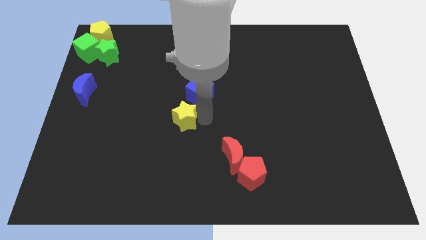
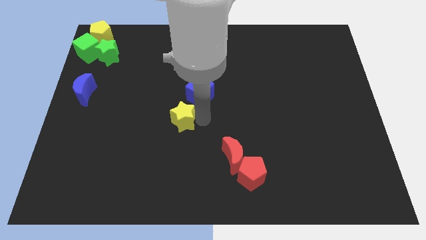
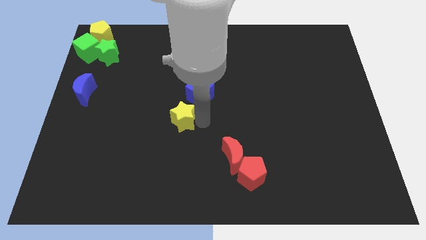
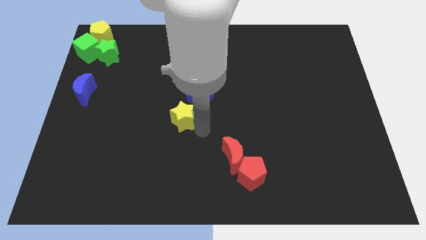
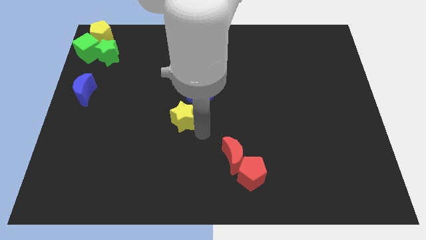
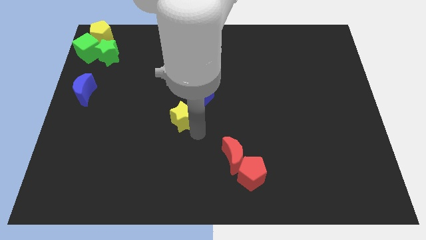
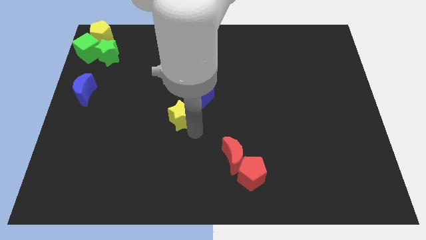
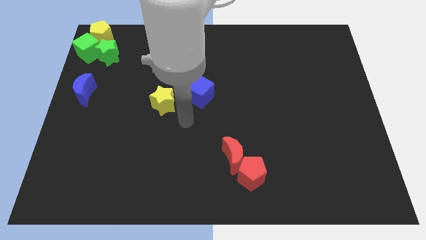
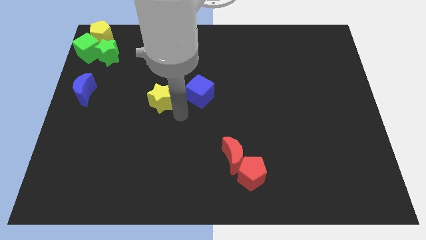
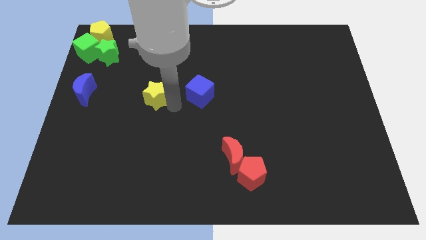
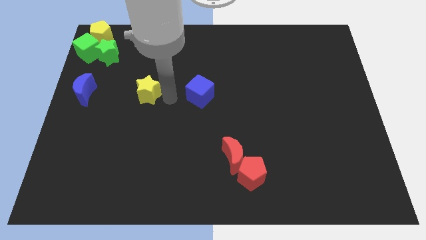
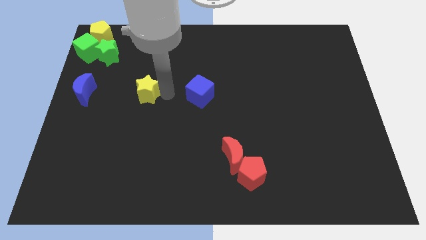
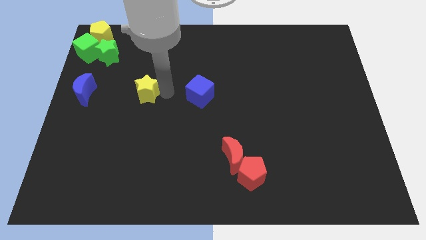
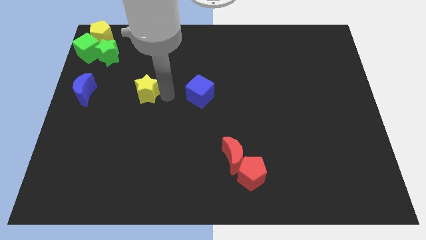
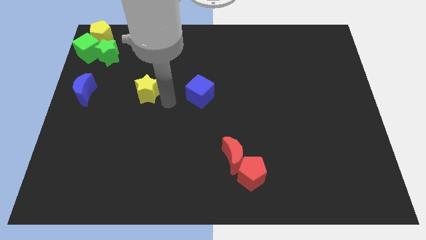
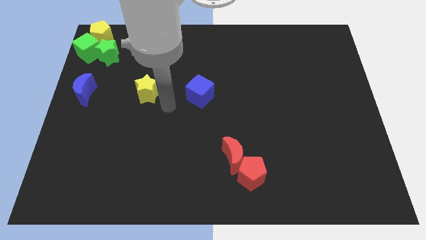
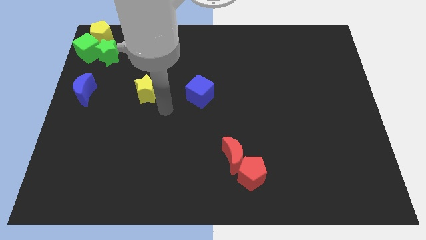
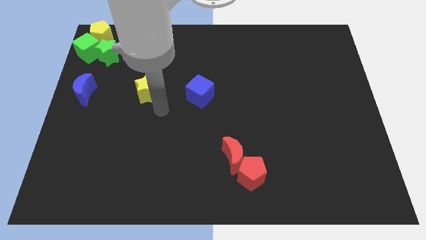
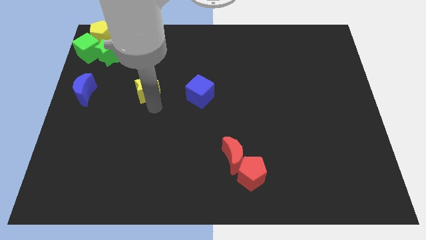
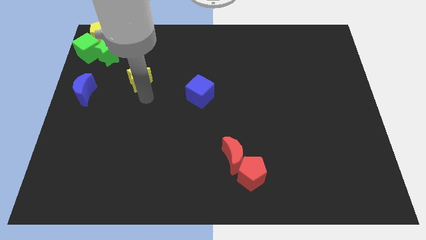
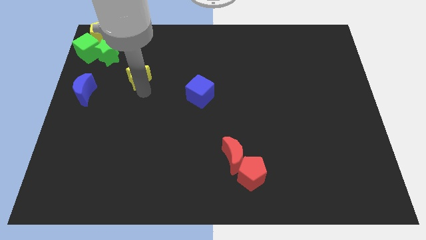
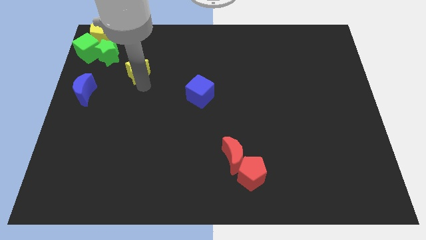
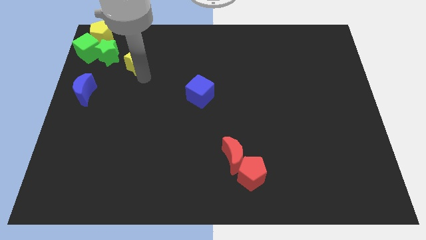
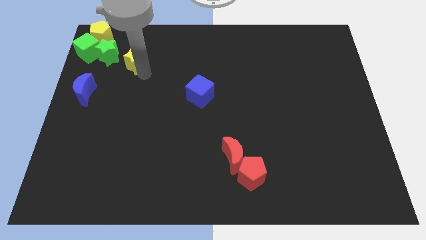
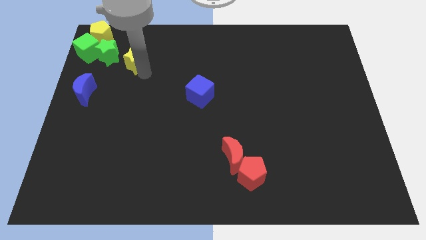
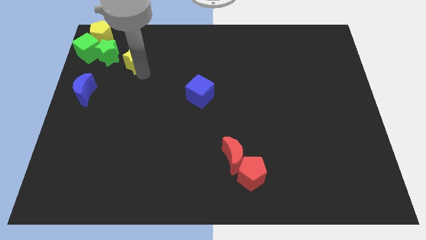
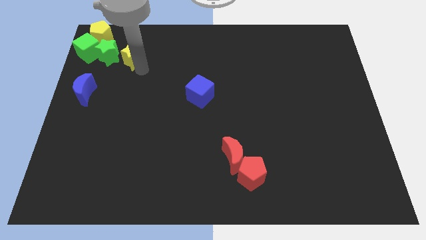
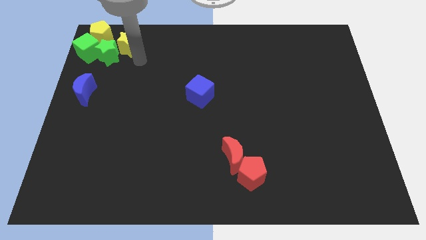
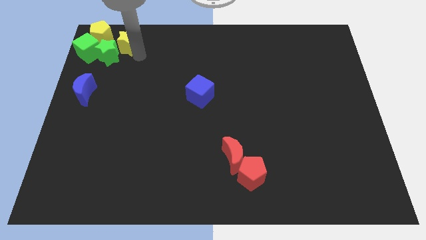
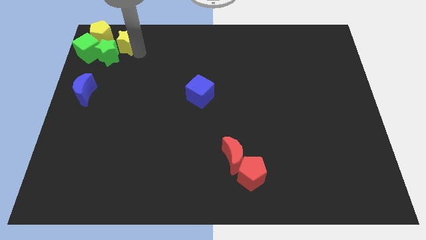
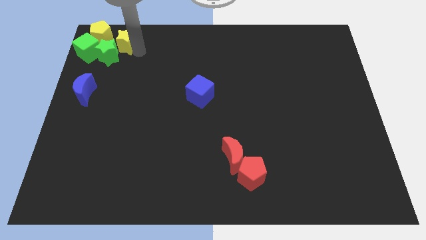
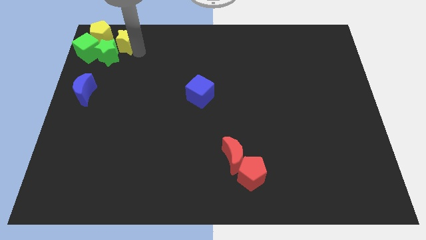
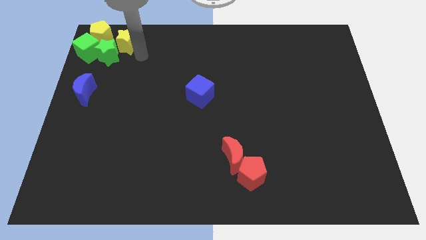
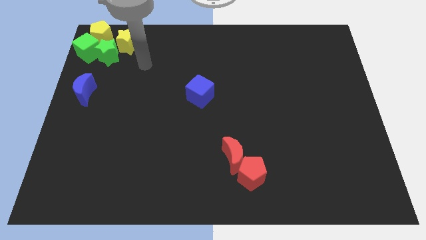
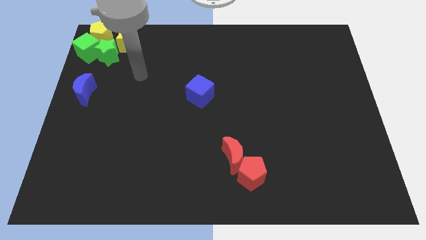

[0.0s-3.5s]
move the yellow star into the group of yellow and green blocks at the top

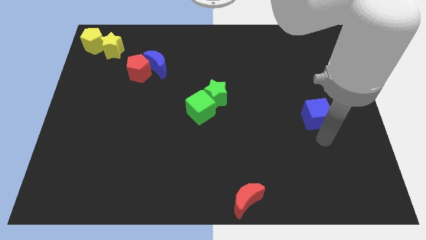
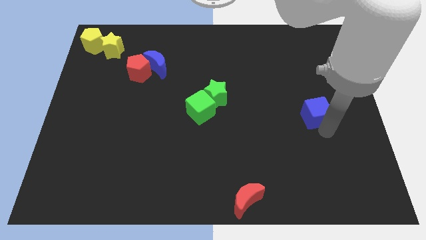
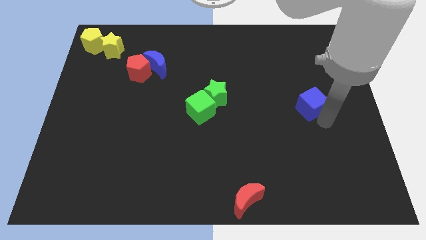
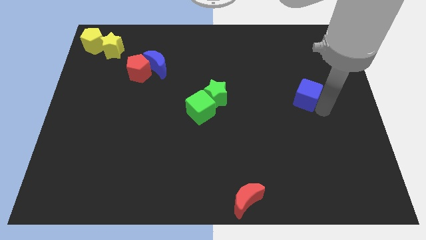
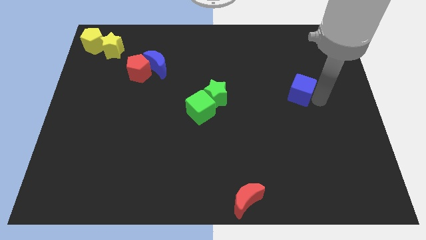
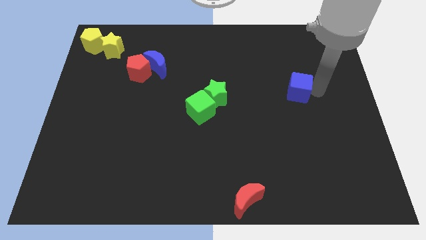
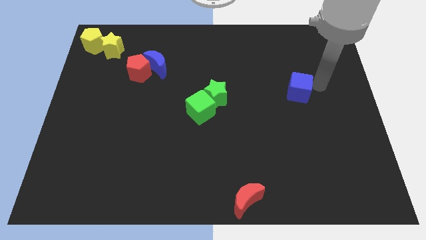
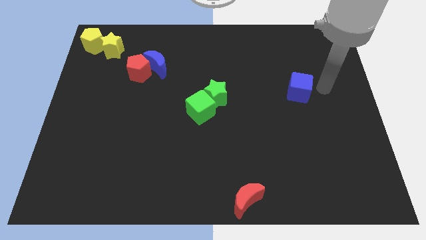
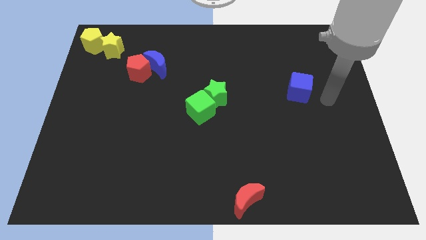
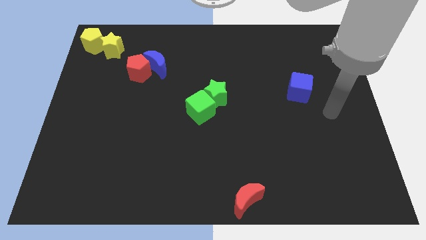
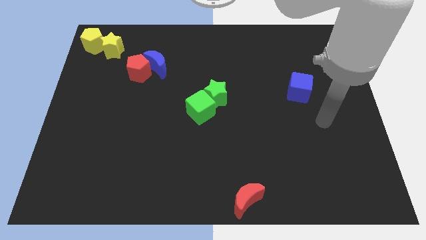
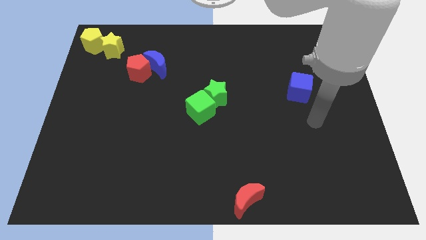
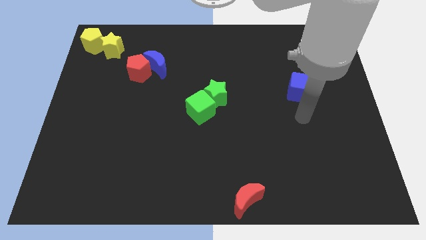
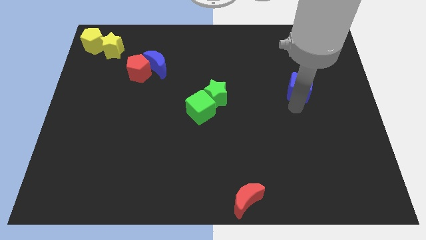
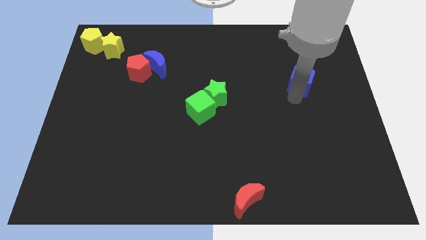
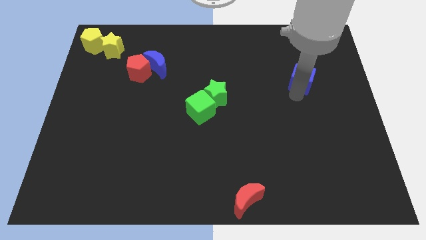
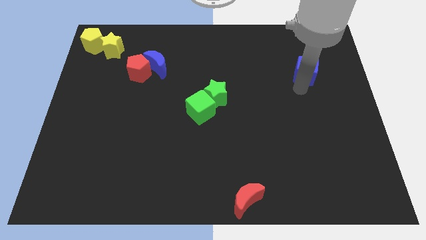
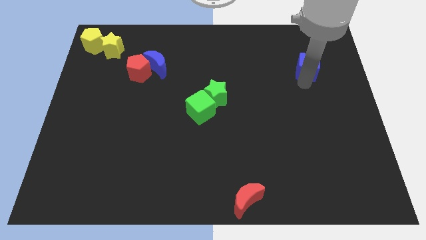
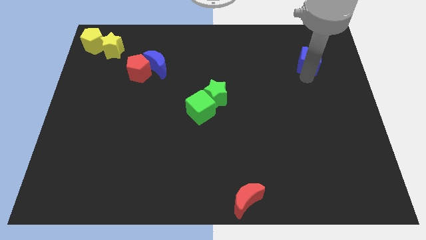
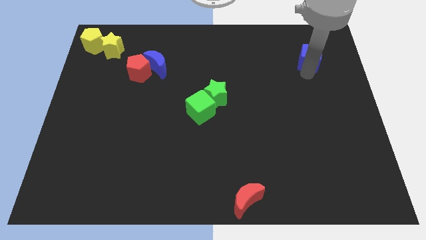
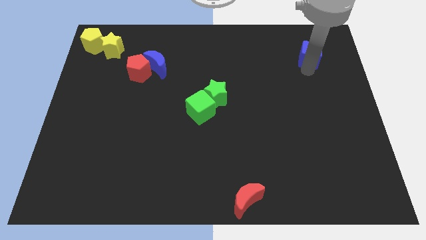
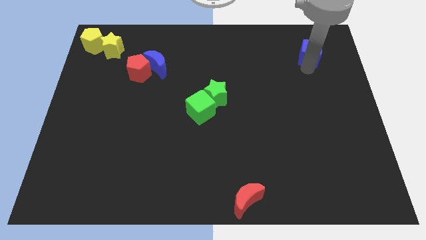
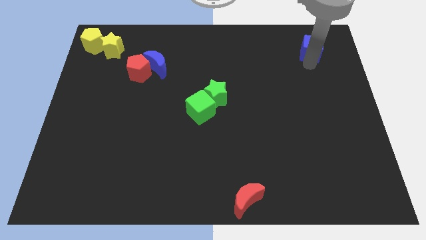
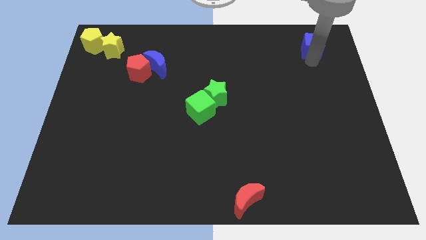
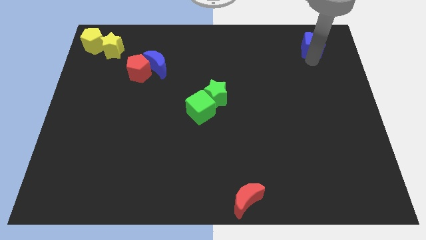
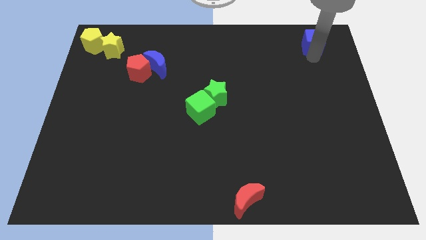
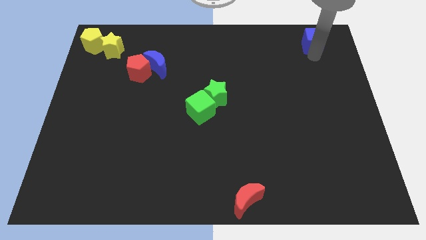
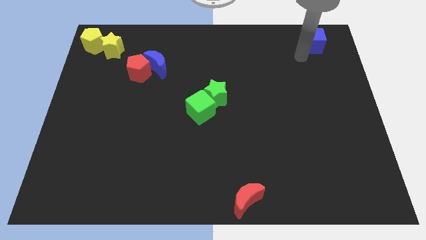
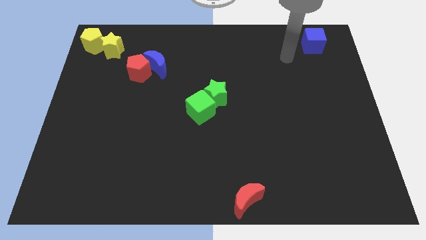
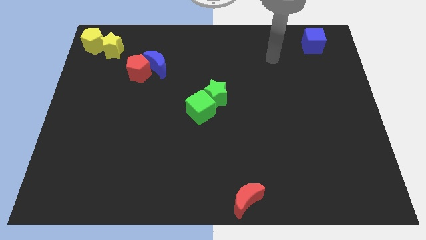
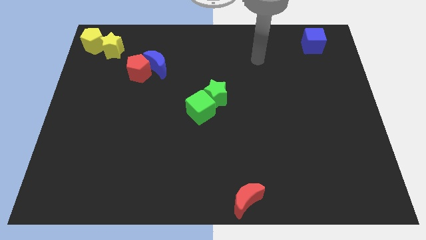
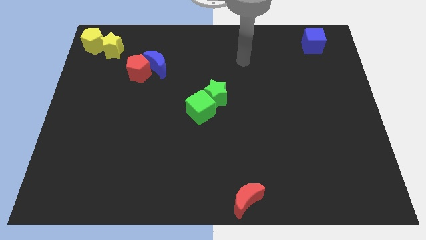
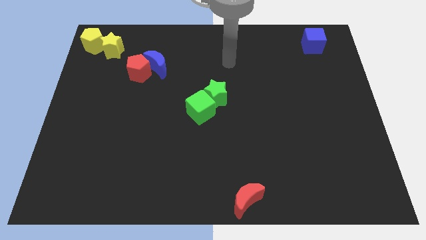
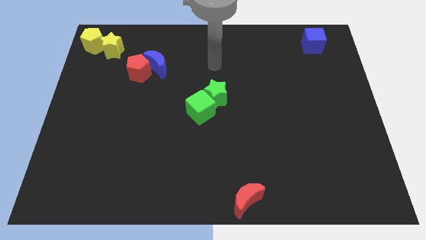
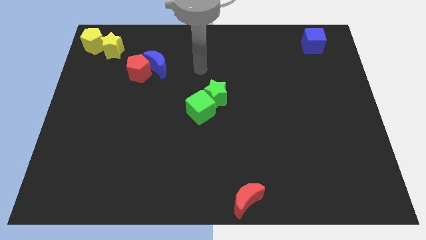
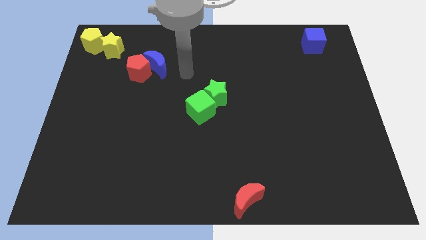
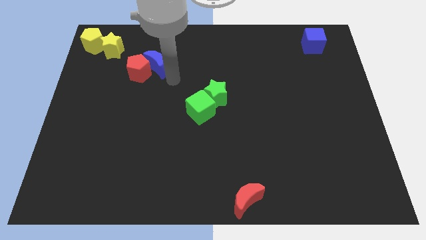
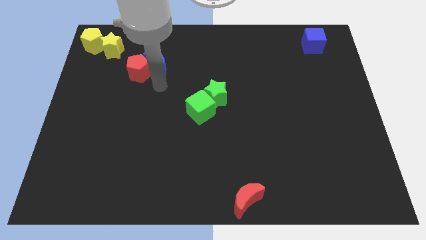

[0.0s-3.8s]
move blue cube to the top right of the board

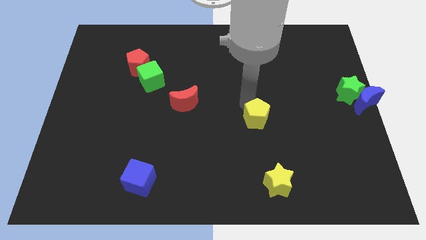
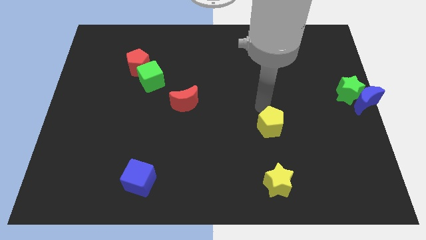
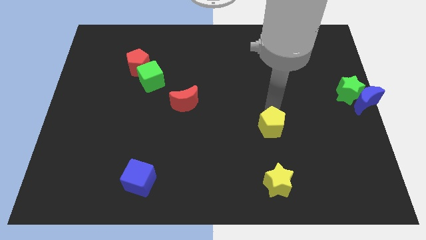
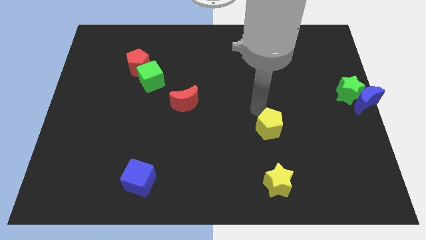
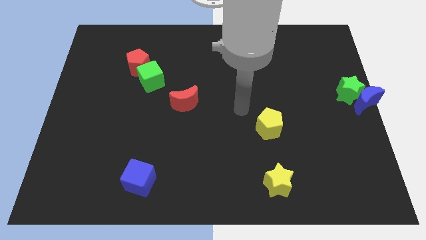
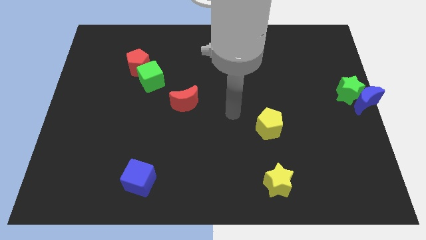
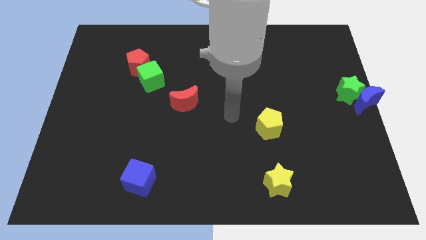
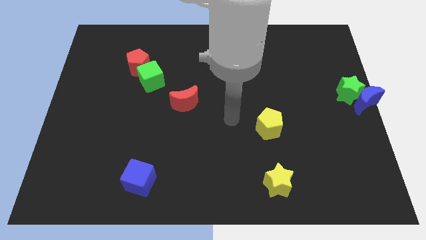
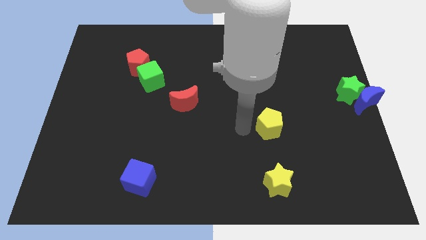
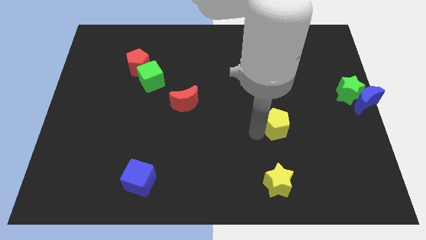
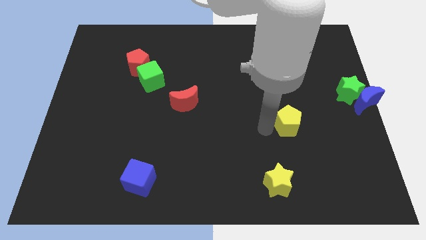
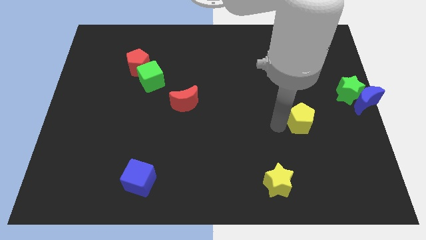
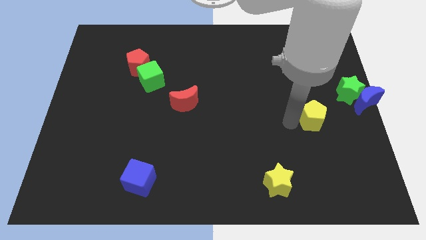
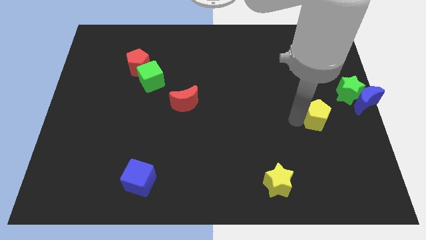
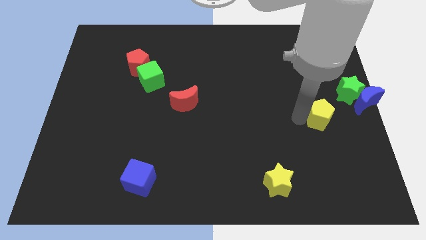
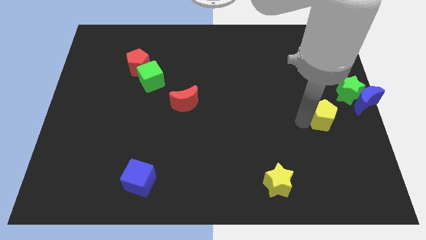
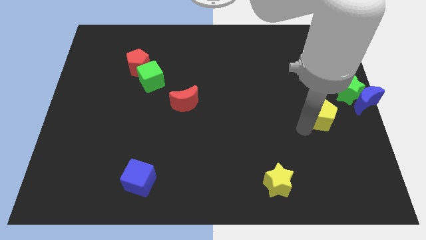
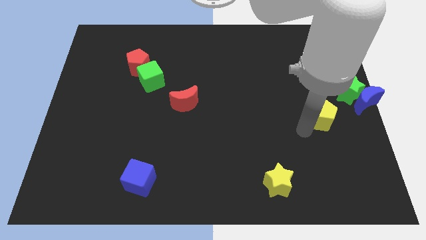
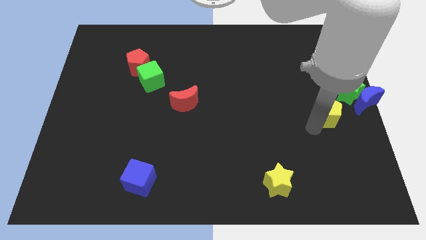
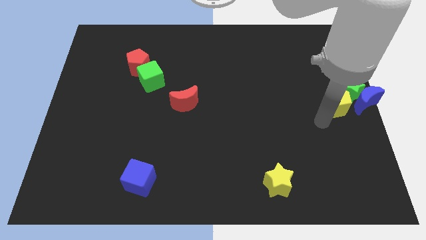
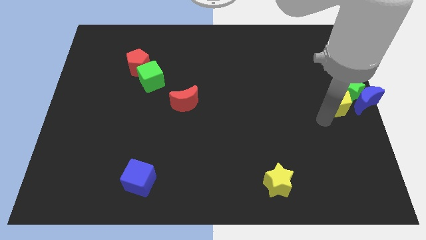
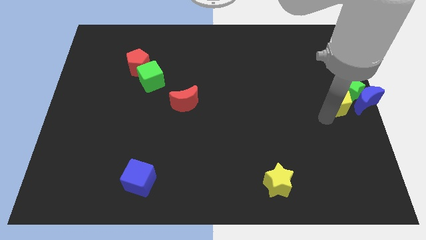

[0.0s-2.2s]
move the yellow pentagon into green star
